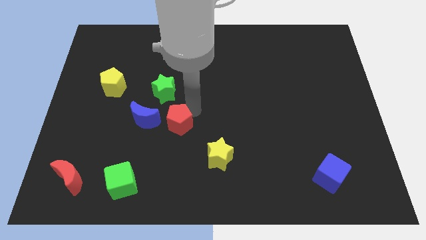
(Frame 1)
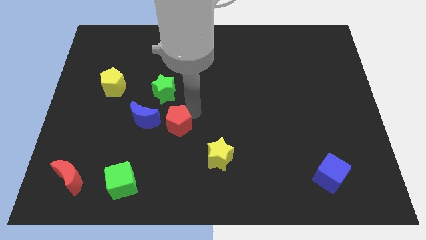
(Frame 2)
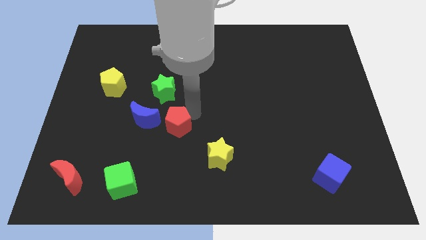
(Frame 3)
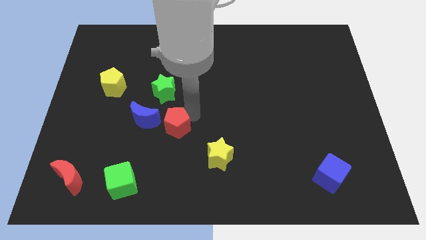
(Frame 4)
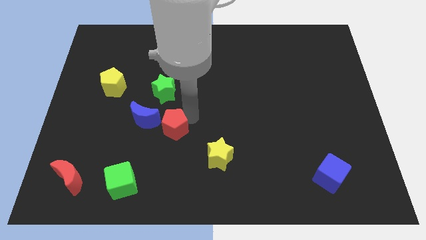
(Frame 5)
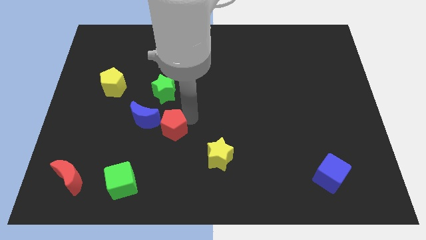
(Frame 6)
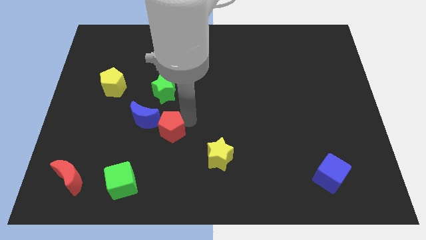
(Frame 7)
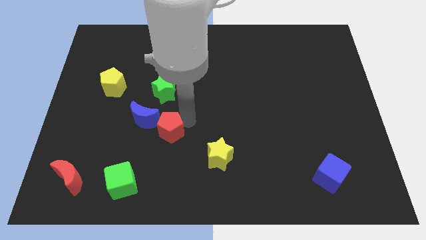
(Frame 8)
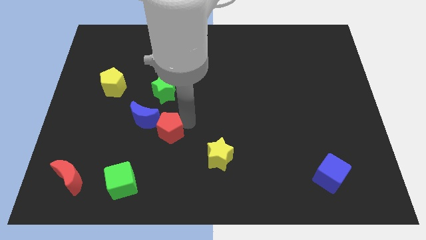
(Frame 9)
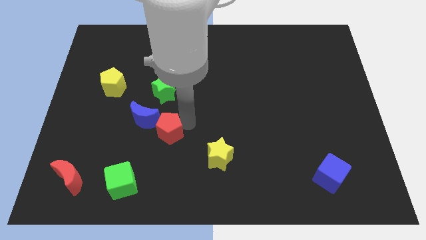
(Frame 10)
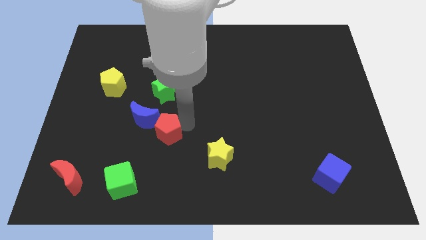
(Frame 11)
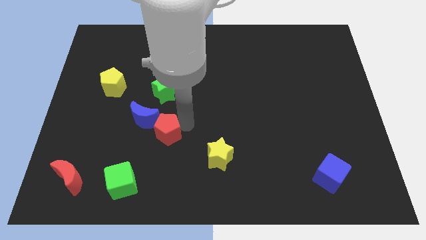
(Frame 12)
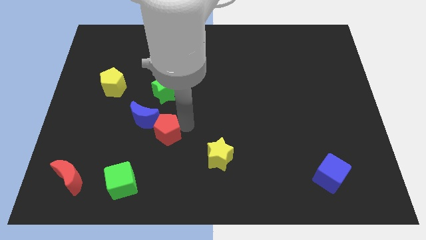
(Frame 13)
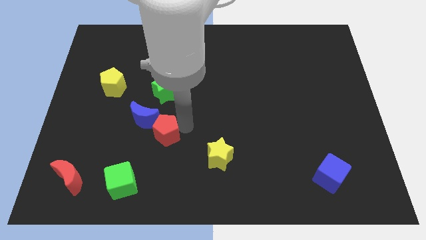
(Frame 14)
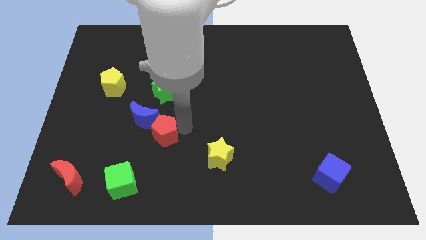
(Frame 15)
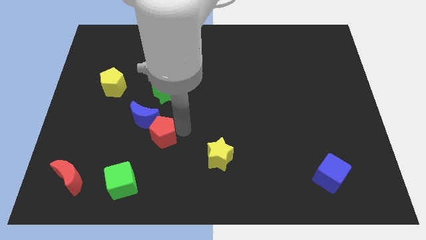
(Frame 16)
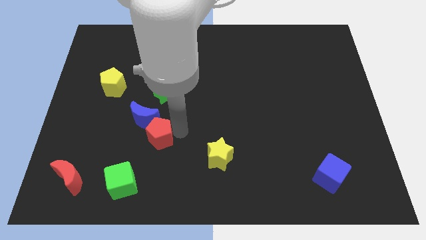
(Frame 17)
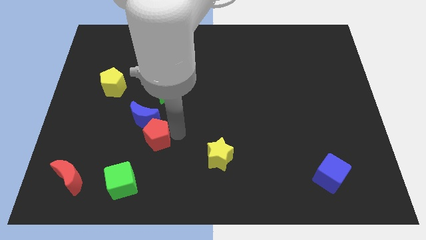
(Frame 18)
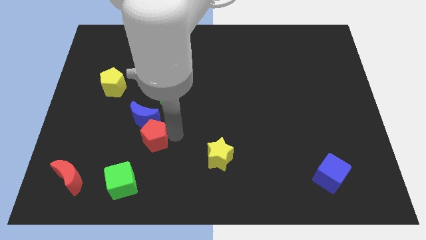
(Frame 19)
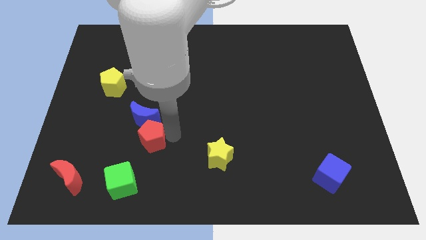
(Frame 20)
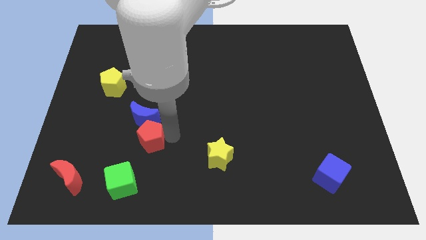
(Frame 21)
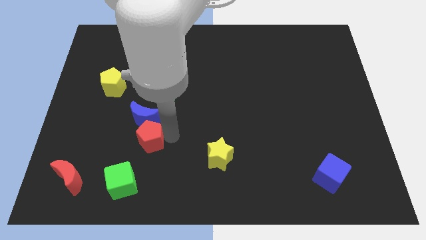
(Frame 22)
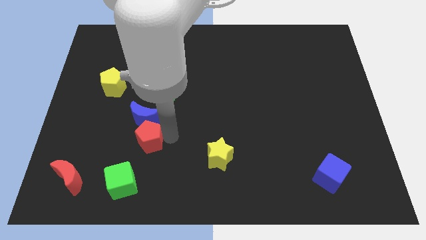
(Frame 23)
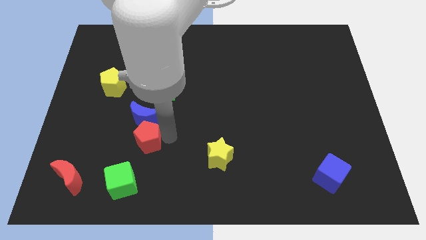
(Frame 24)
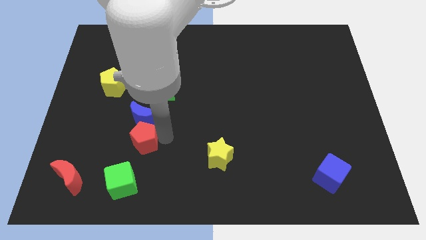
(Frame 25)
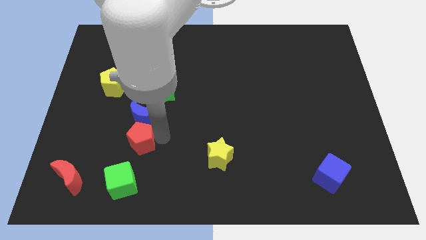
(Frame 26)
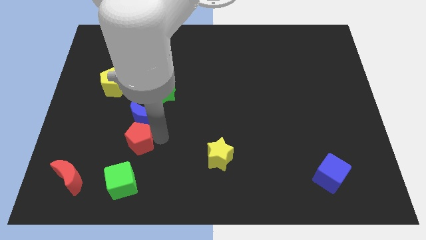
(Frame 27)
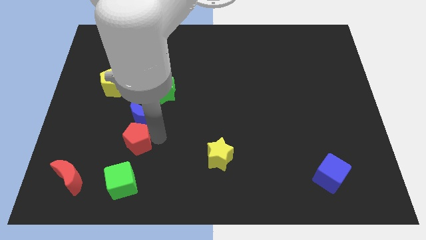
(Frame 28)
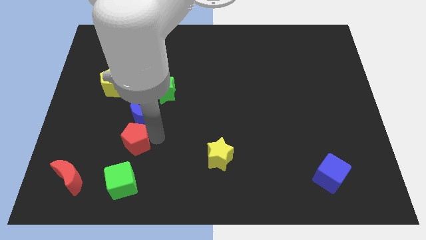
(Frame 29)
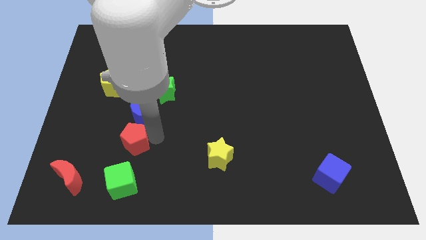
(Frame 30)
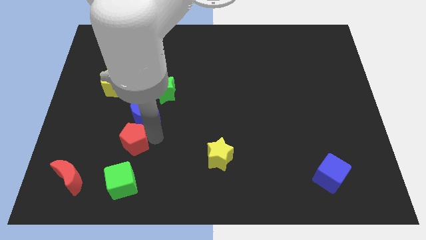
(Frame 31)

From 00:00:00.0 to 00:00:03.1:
push the red pentagon to the bottom side of the blue moon

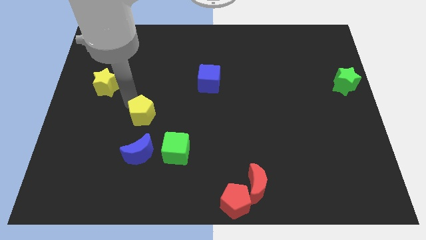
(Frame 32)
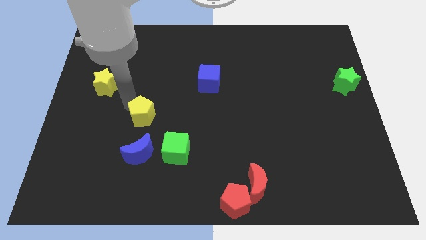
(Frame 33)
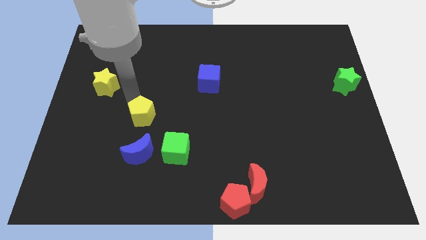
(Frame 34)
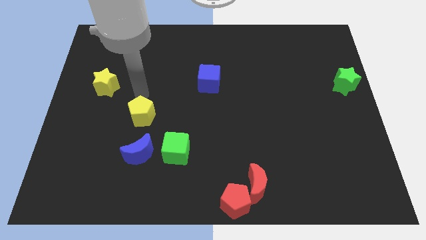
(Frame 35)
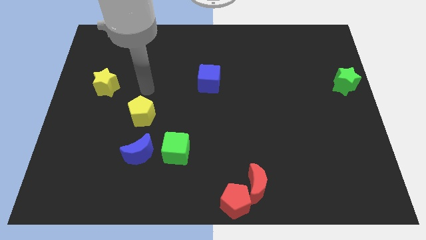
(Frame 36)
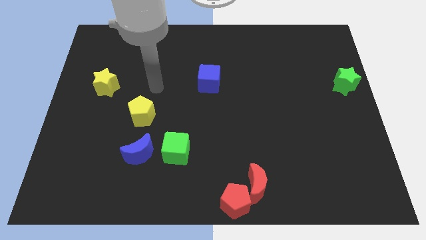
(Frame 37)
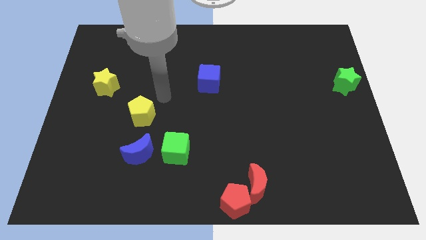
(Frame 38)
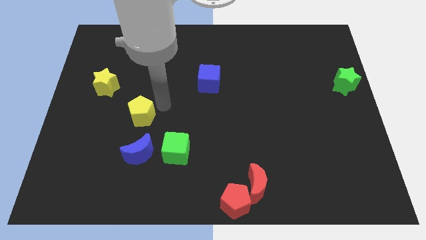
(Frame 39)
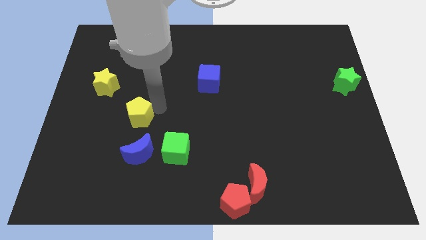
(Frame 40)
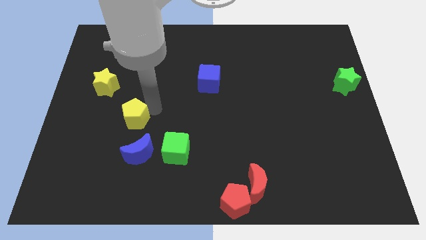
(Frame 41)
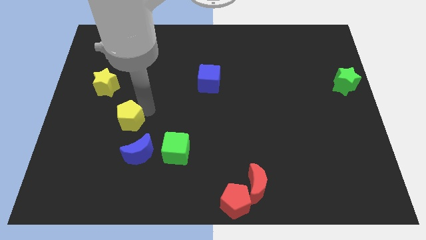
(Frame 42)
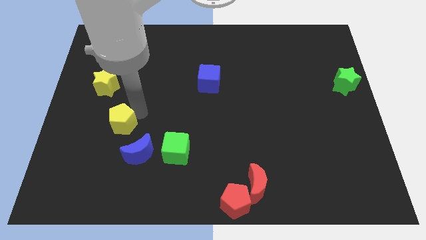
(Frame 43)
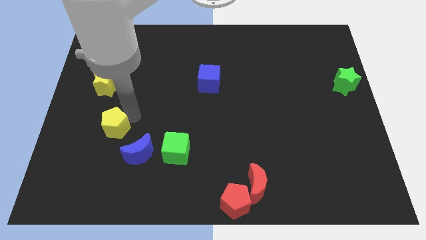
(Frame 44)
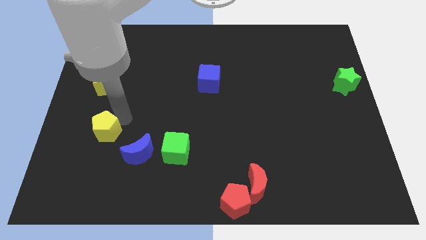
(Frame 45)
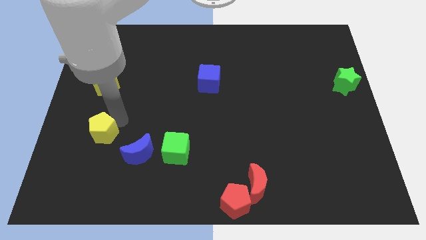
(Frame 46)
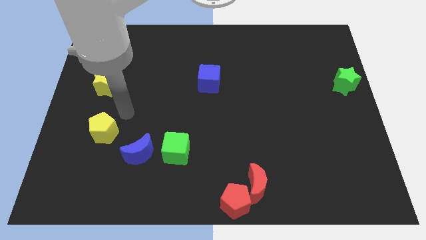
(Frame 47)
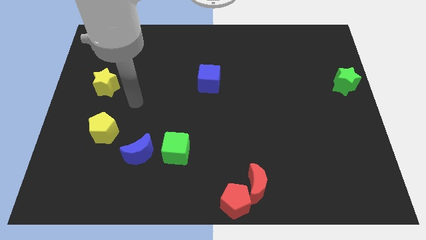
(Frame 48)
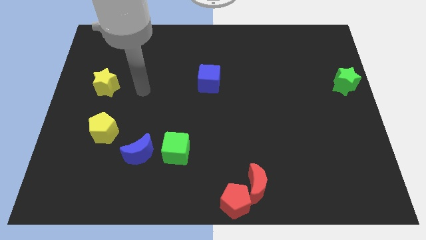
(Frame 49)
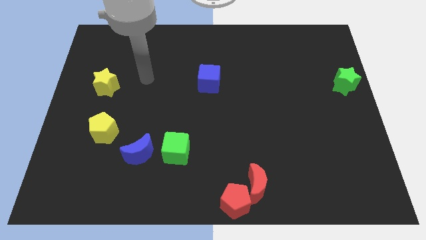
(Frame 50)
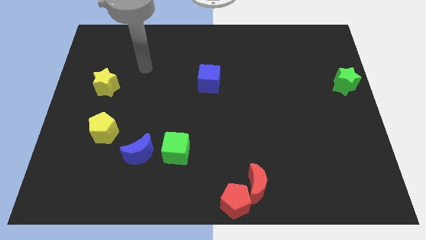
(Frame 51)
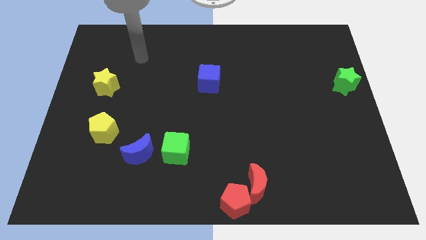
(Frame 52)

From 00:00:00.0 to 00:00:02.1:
put the yellow pentagon vertically below the yellow star

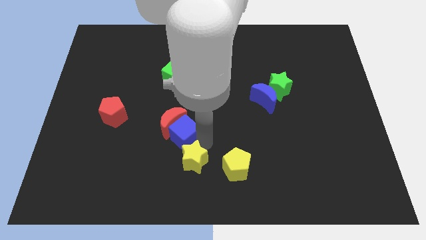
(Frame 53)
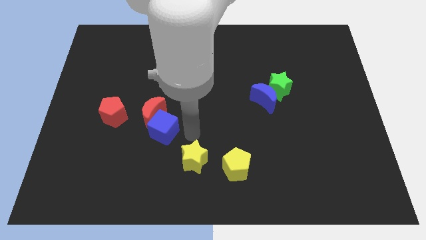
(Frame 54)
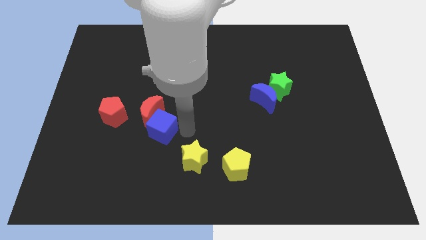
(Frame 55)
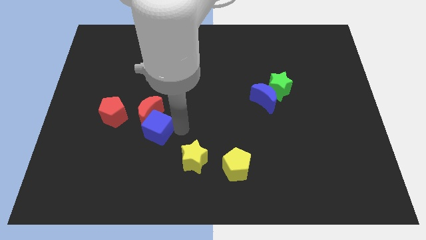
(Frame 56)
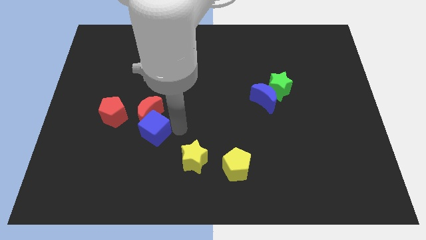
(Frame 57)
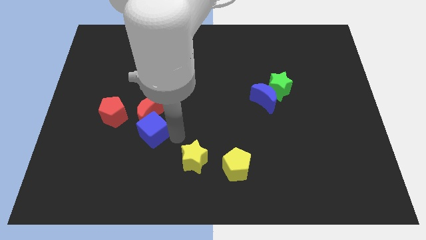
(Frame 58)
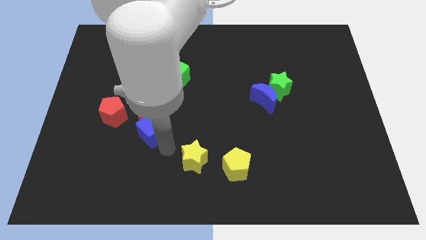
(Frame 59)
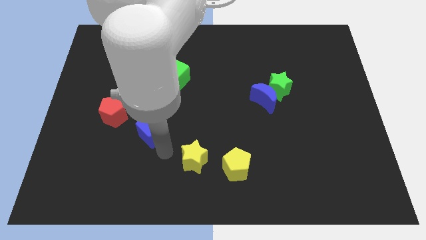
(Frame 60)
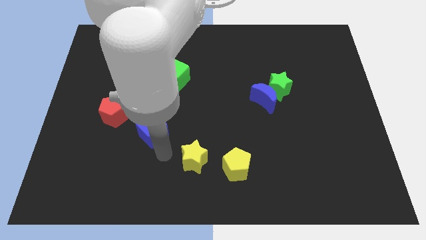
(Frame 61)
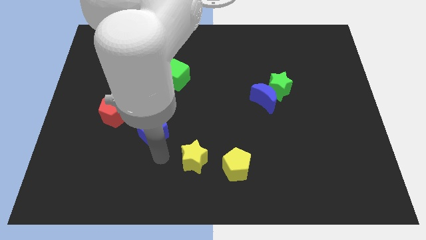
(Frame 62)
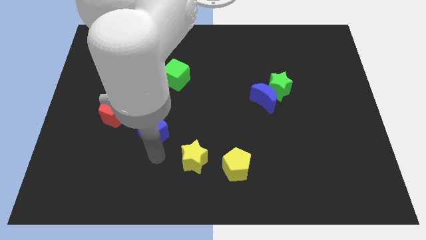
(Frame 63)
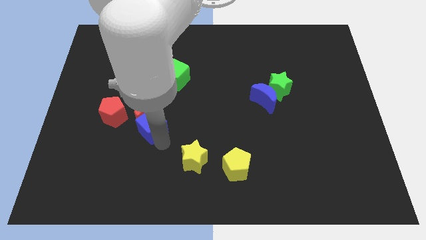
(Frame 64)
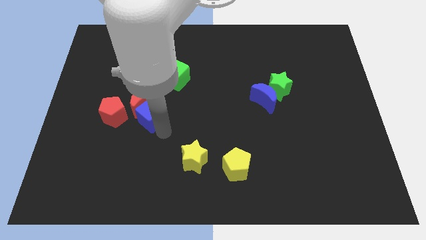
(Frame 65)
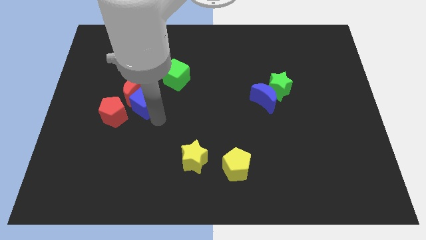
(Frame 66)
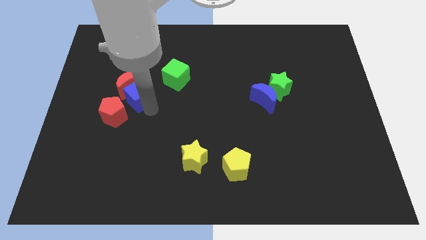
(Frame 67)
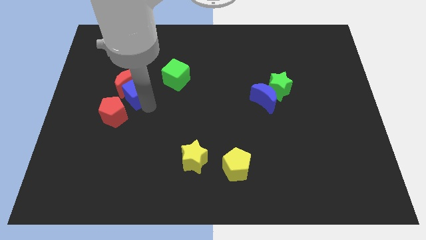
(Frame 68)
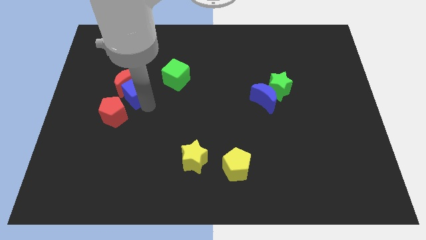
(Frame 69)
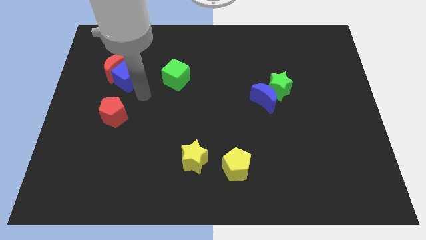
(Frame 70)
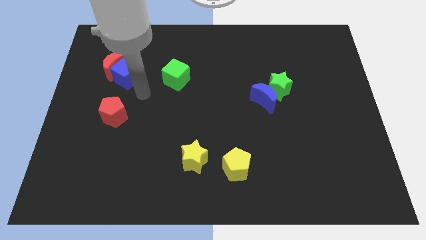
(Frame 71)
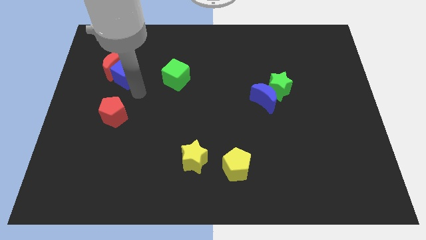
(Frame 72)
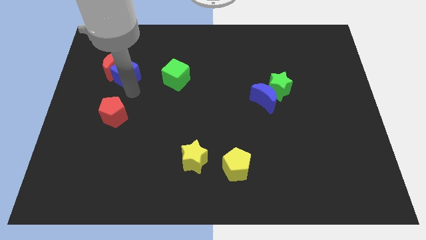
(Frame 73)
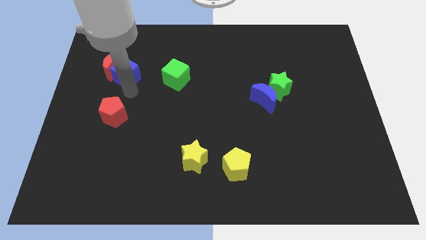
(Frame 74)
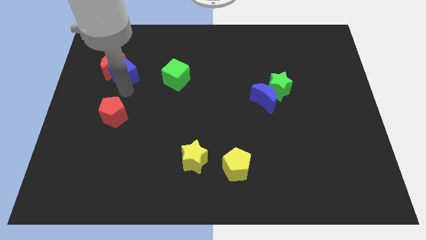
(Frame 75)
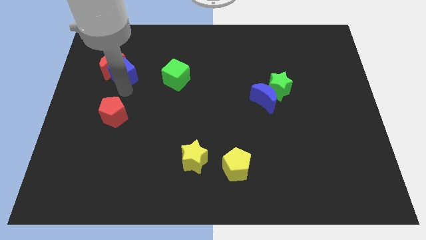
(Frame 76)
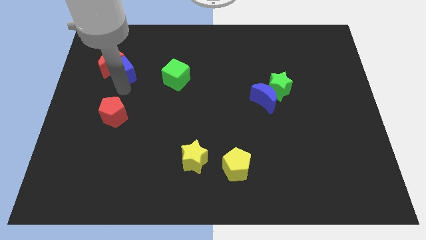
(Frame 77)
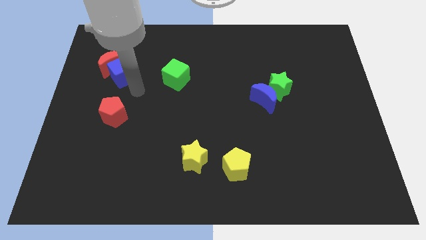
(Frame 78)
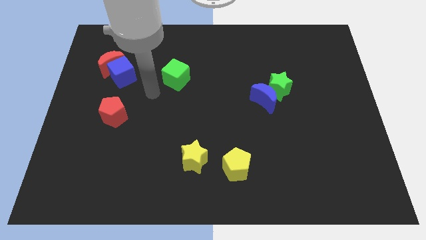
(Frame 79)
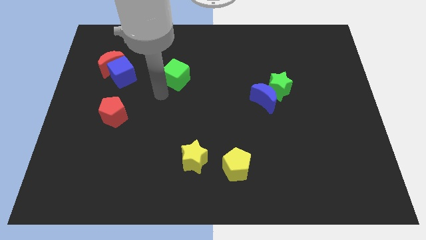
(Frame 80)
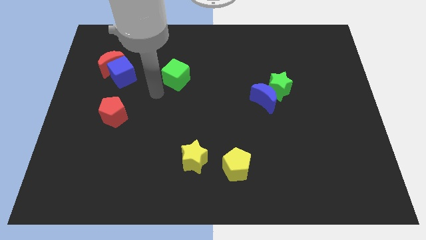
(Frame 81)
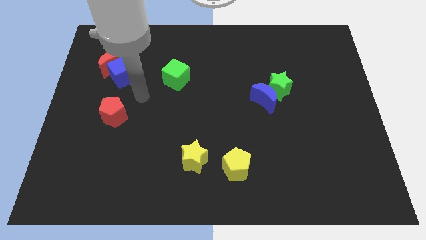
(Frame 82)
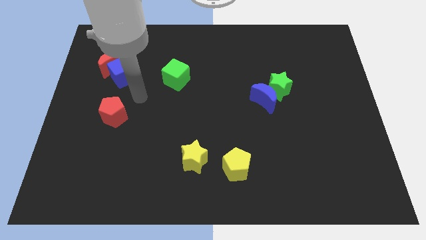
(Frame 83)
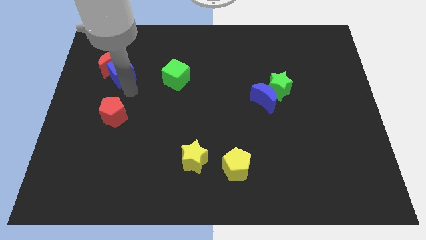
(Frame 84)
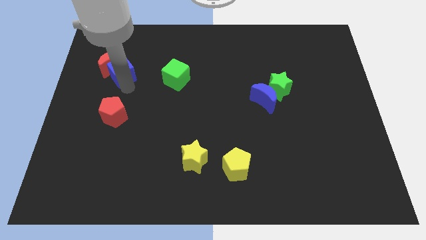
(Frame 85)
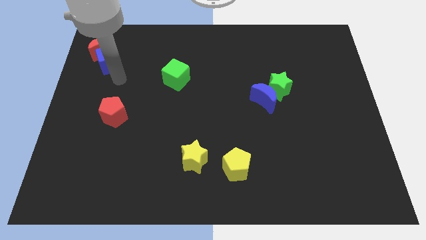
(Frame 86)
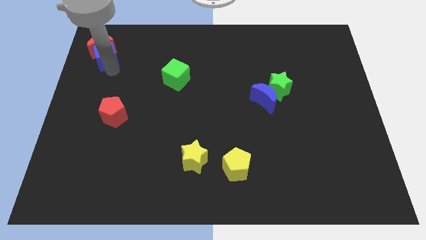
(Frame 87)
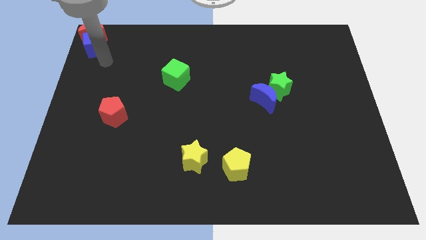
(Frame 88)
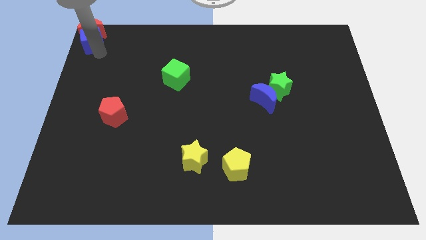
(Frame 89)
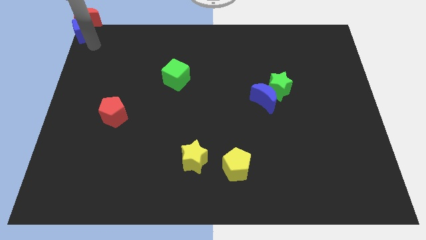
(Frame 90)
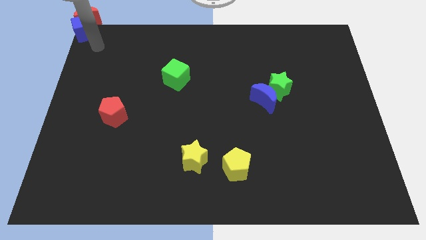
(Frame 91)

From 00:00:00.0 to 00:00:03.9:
push the red moon with a blue cube to the top left corner of the board
